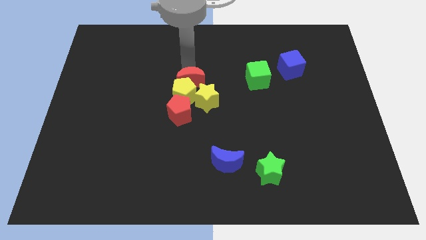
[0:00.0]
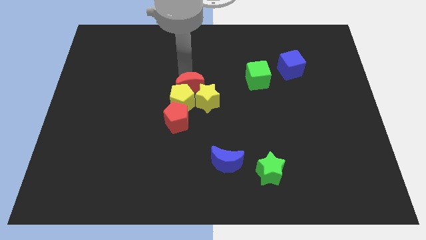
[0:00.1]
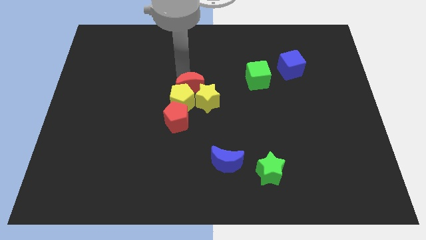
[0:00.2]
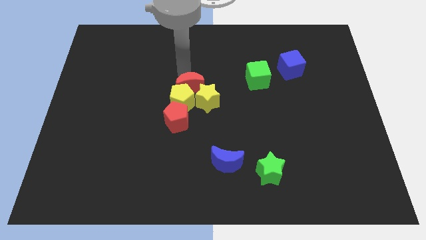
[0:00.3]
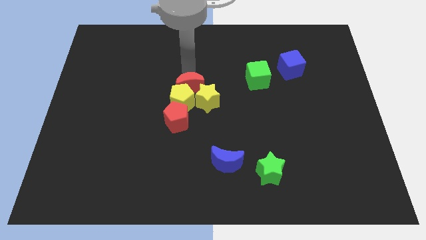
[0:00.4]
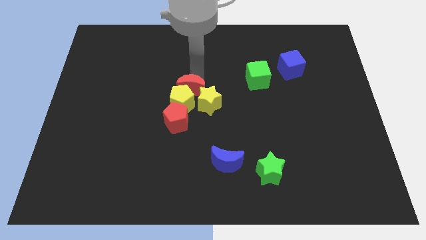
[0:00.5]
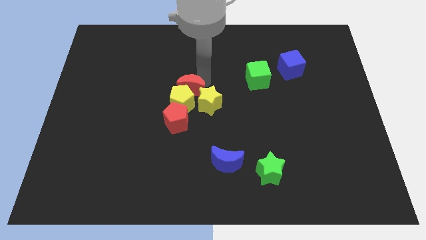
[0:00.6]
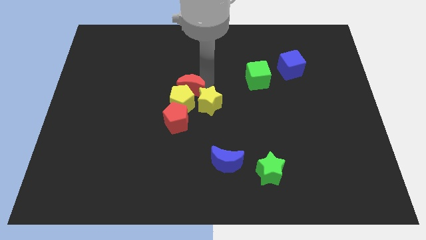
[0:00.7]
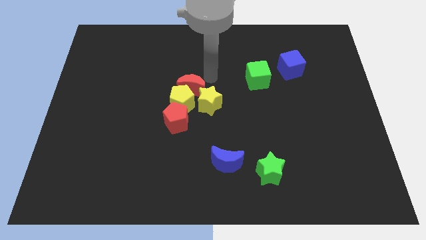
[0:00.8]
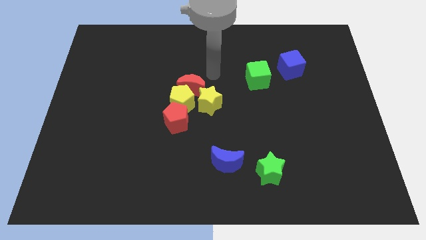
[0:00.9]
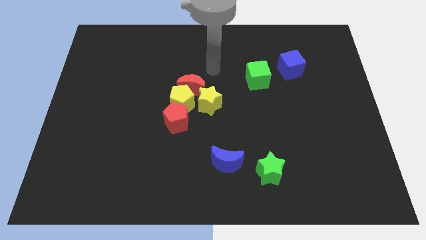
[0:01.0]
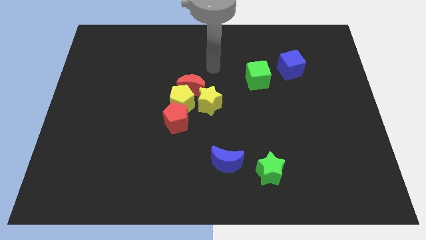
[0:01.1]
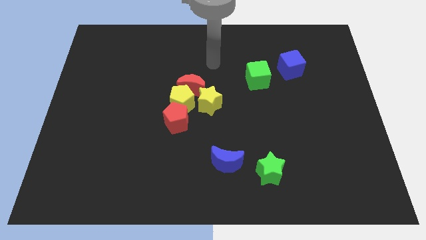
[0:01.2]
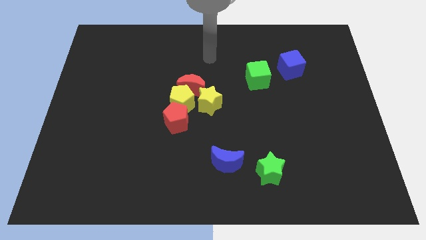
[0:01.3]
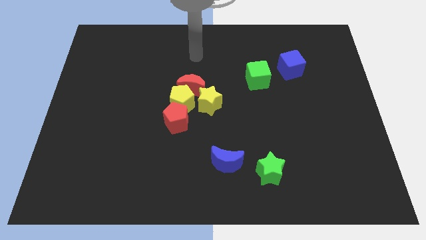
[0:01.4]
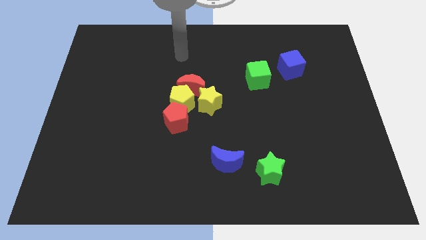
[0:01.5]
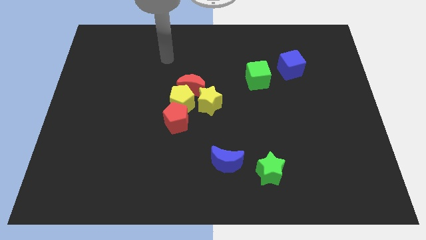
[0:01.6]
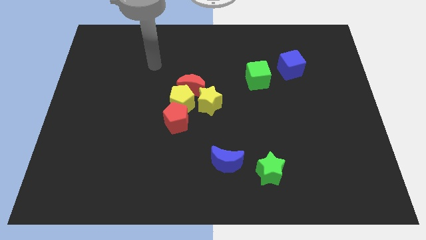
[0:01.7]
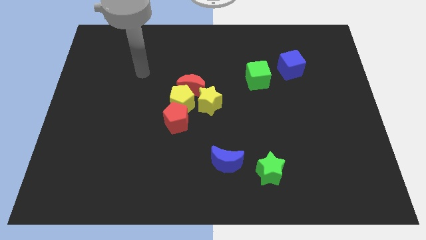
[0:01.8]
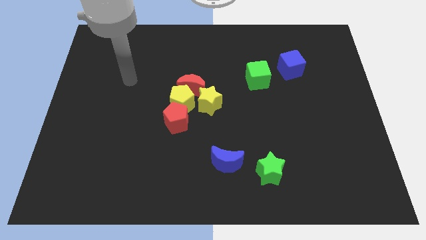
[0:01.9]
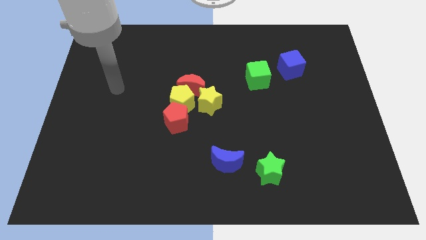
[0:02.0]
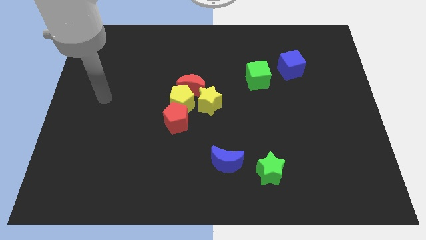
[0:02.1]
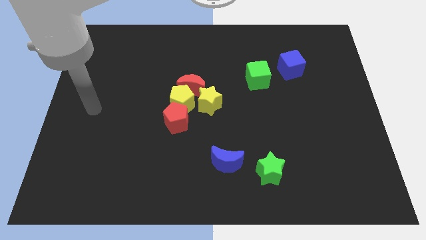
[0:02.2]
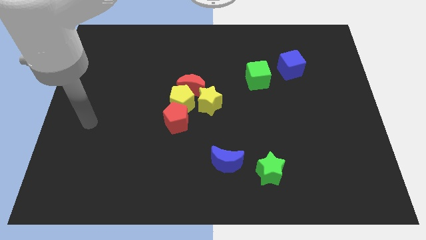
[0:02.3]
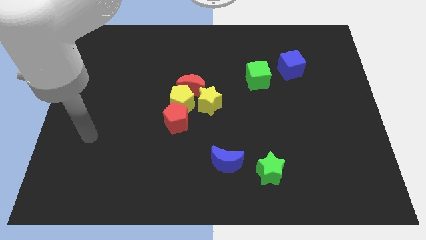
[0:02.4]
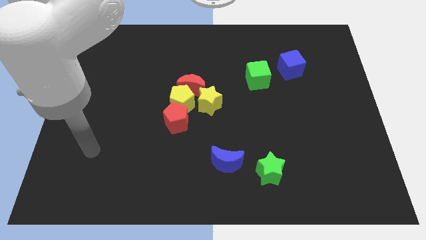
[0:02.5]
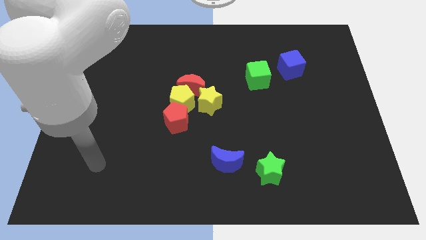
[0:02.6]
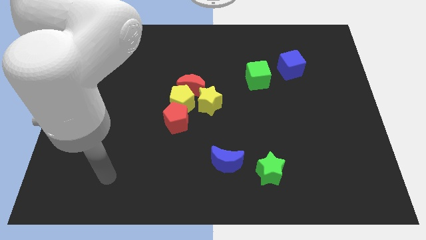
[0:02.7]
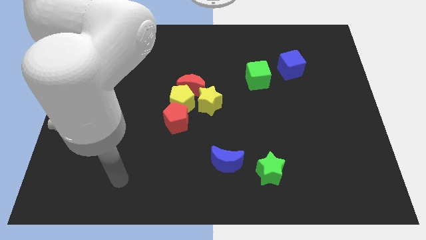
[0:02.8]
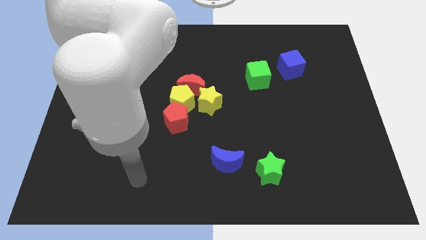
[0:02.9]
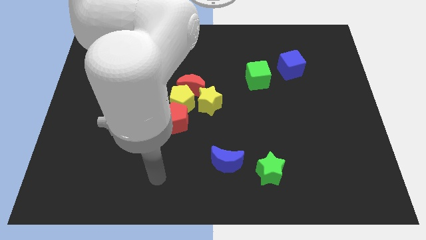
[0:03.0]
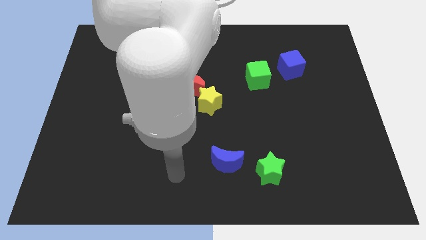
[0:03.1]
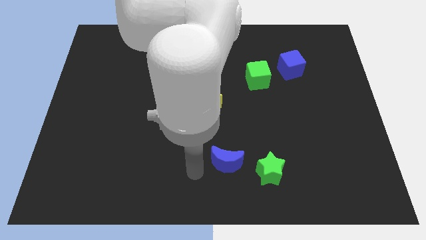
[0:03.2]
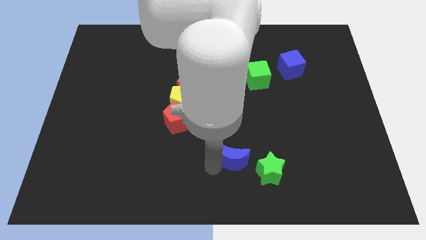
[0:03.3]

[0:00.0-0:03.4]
move the arm to the blue crescent

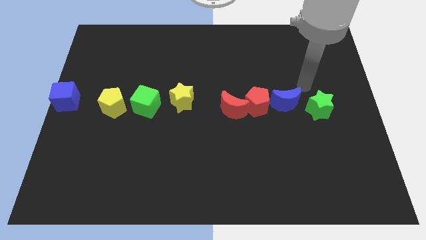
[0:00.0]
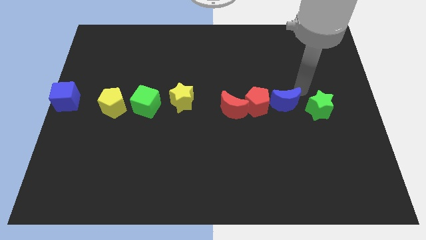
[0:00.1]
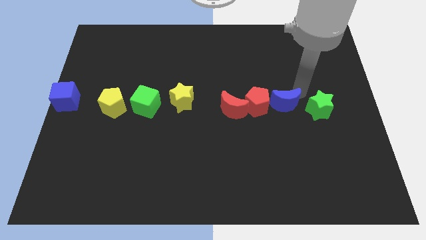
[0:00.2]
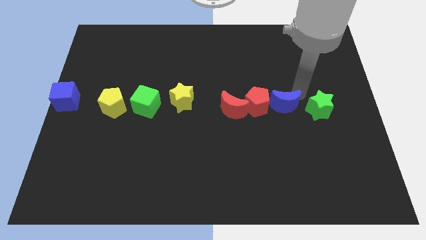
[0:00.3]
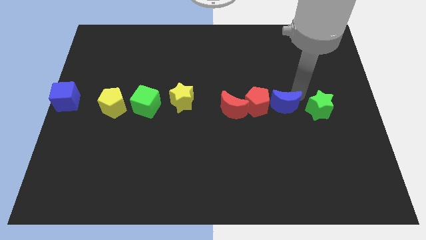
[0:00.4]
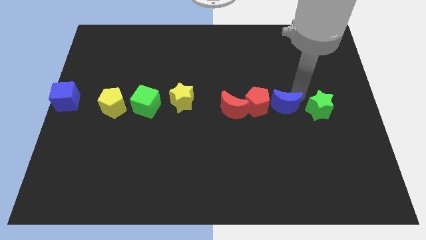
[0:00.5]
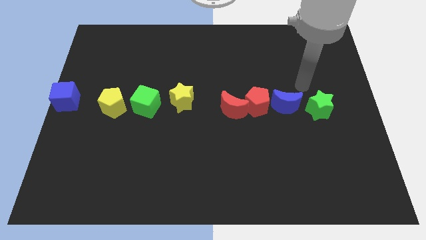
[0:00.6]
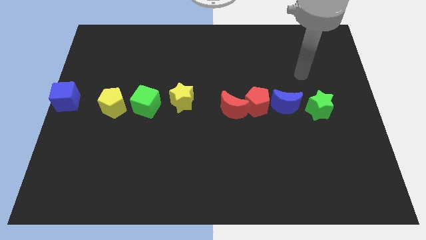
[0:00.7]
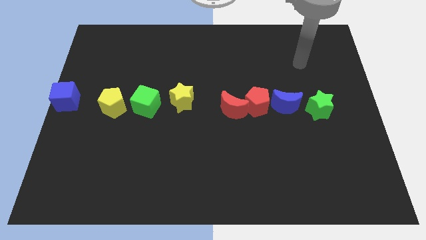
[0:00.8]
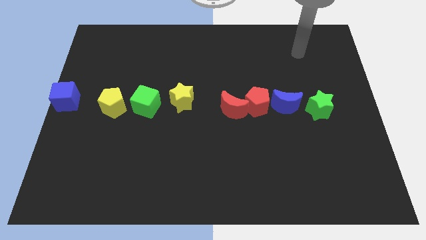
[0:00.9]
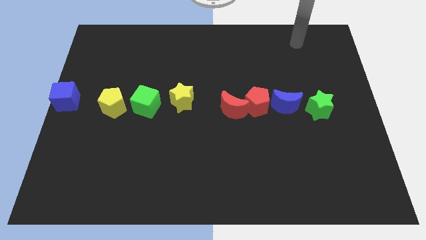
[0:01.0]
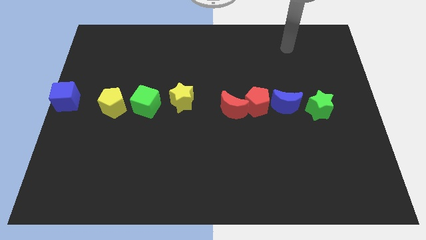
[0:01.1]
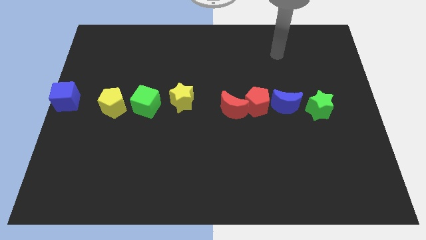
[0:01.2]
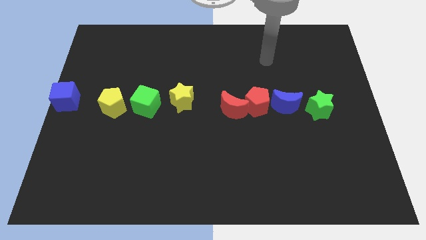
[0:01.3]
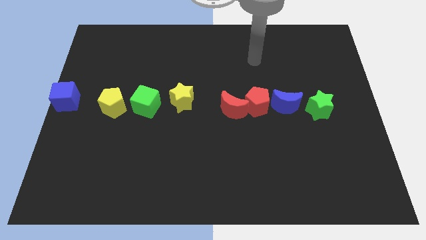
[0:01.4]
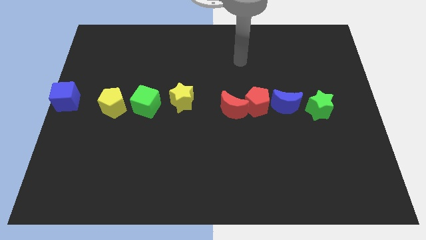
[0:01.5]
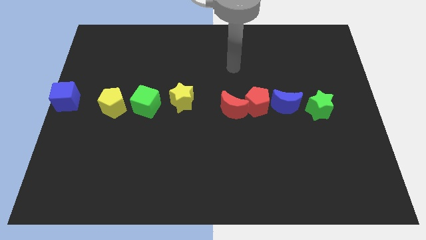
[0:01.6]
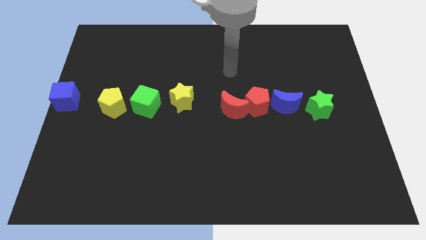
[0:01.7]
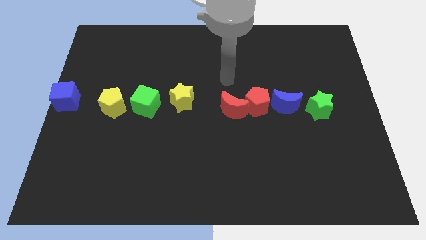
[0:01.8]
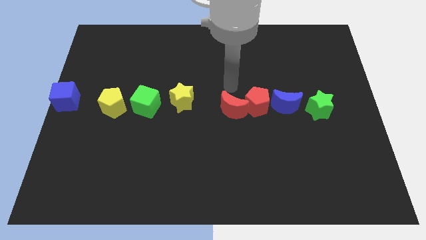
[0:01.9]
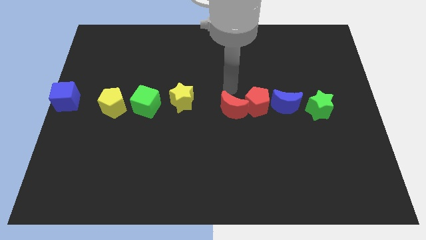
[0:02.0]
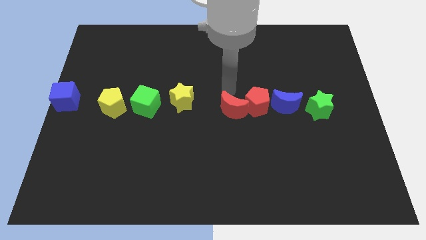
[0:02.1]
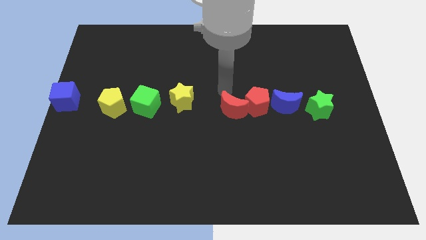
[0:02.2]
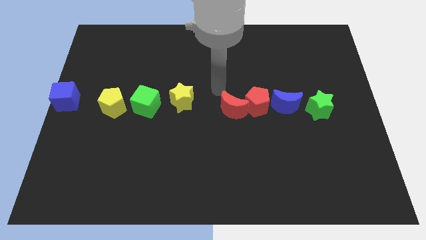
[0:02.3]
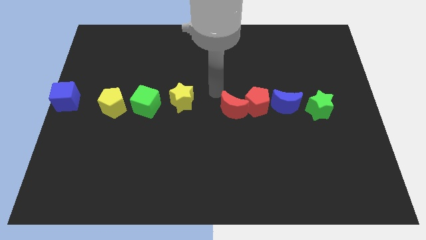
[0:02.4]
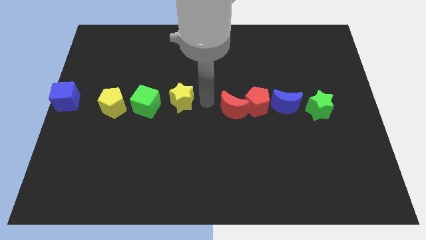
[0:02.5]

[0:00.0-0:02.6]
point your arm in between the yellow star and the group of red blocks

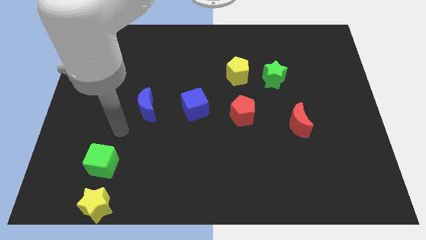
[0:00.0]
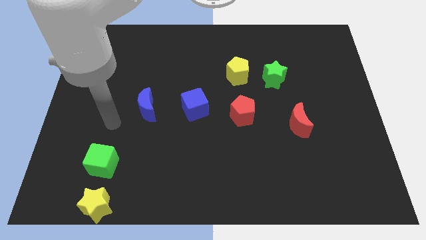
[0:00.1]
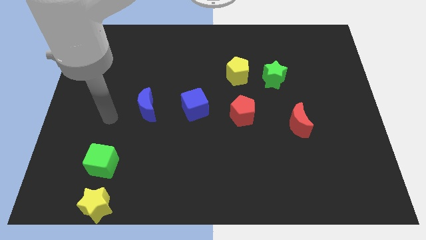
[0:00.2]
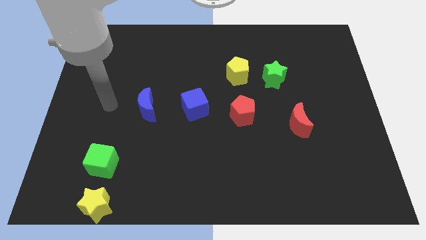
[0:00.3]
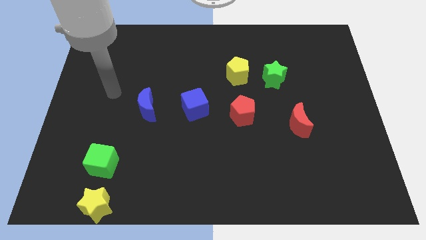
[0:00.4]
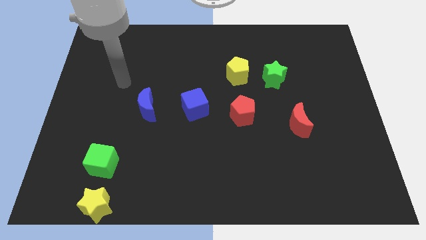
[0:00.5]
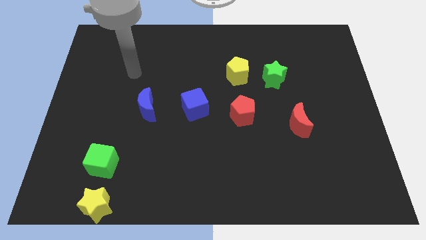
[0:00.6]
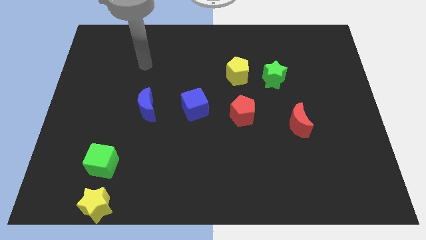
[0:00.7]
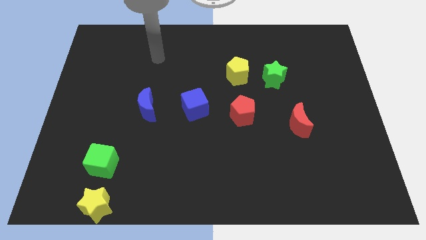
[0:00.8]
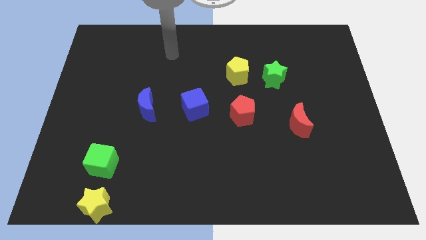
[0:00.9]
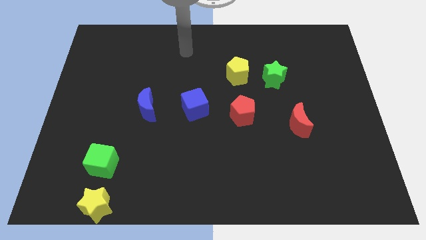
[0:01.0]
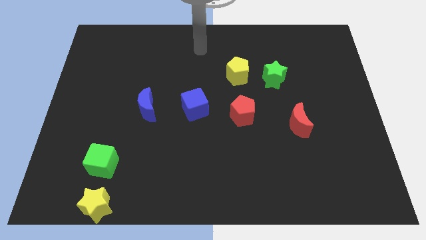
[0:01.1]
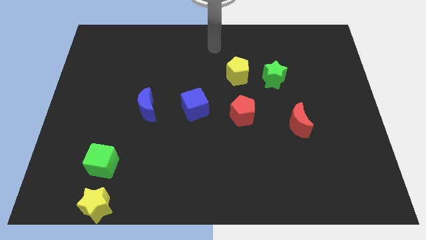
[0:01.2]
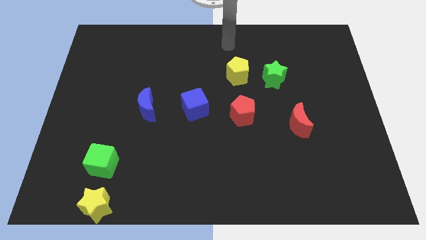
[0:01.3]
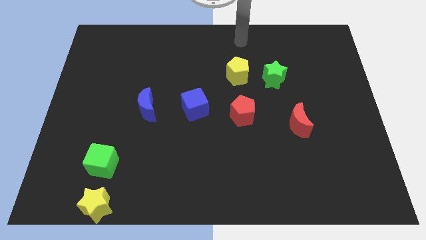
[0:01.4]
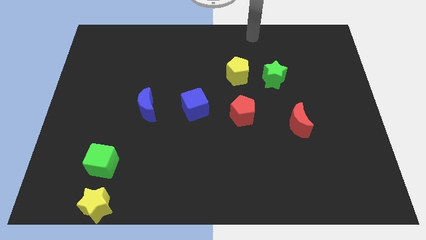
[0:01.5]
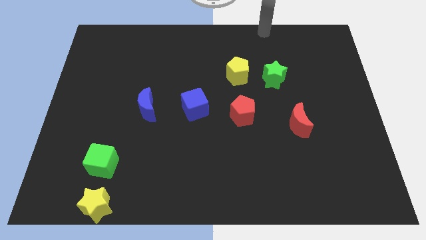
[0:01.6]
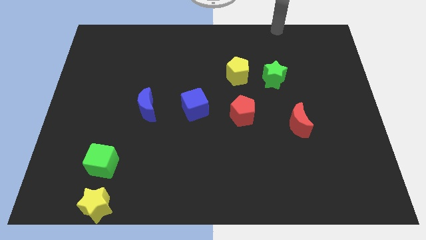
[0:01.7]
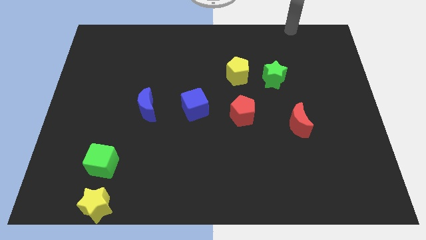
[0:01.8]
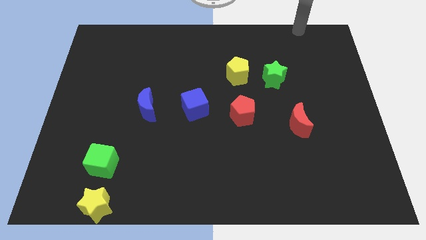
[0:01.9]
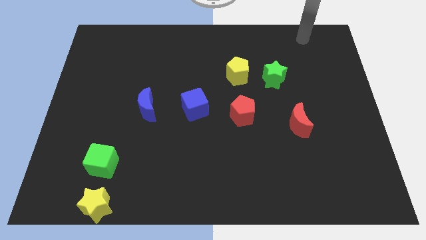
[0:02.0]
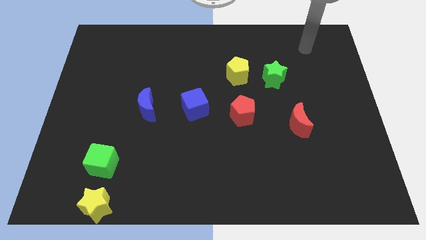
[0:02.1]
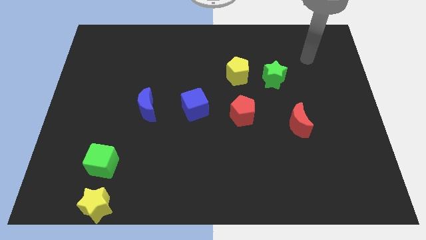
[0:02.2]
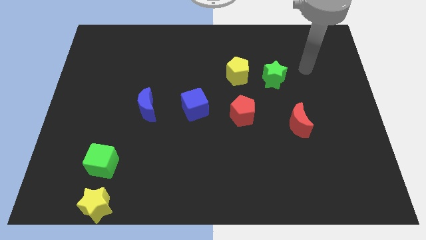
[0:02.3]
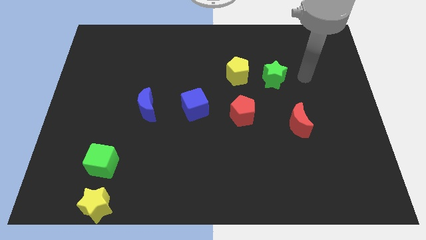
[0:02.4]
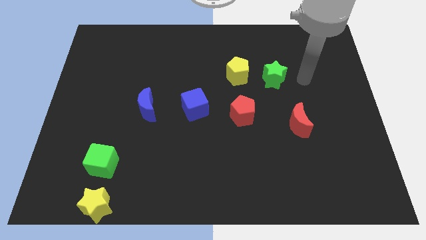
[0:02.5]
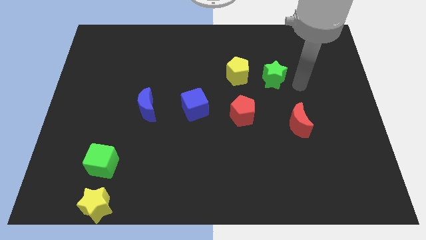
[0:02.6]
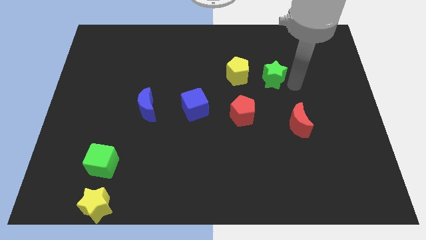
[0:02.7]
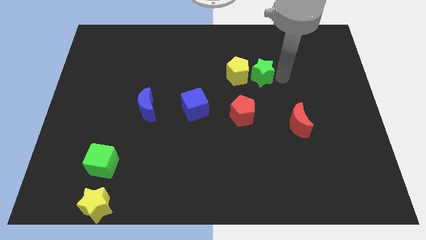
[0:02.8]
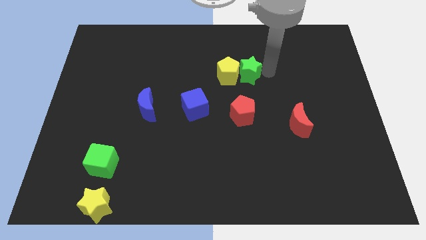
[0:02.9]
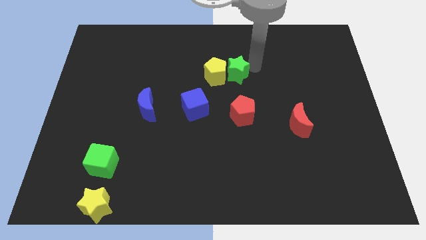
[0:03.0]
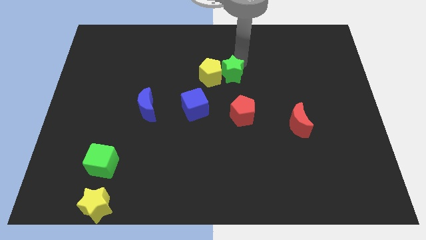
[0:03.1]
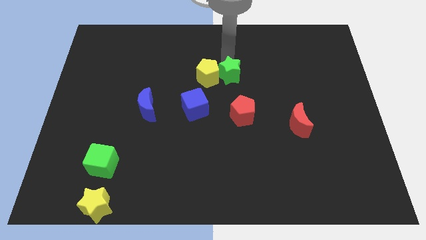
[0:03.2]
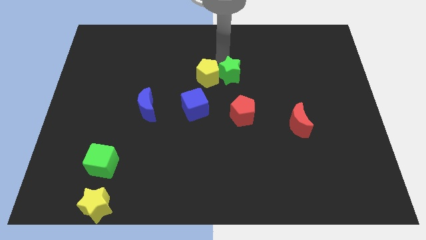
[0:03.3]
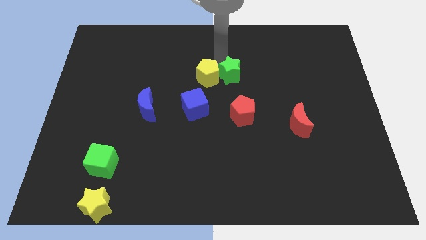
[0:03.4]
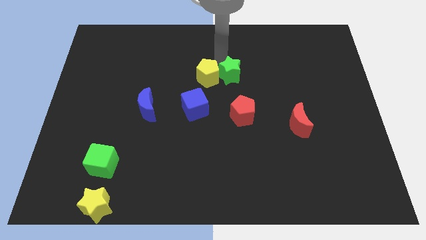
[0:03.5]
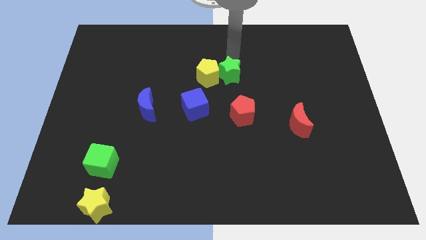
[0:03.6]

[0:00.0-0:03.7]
push the green star into the yellow pentagon
